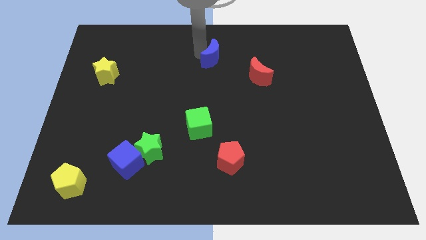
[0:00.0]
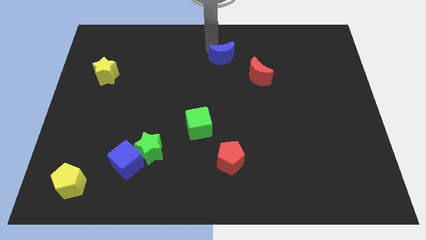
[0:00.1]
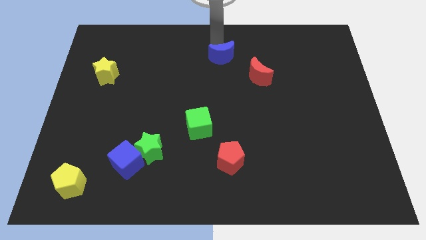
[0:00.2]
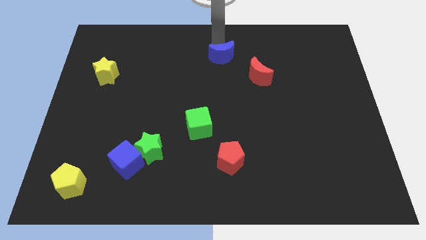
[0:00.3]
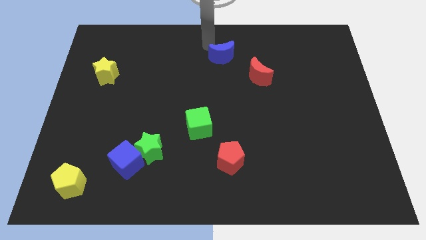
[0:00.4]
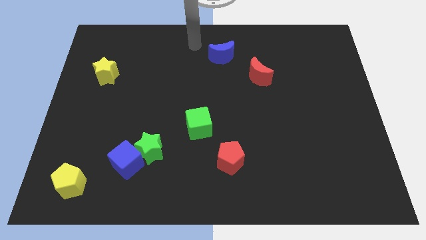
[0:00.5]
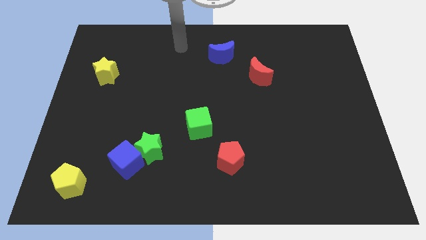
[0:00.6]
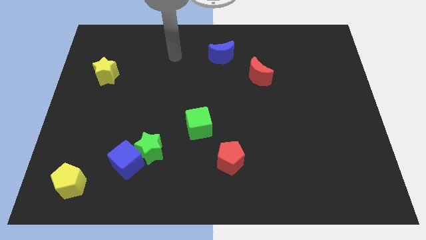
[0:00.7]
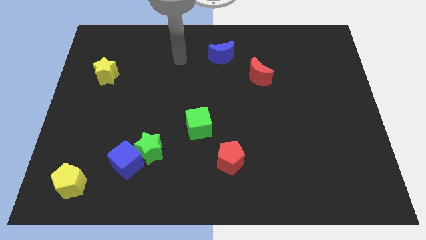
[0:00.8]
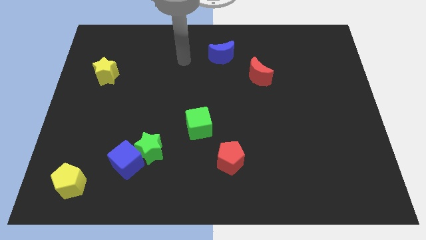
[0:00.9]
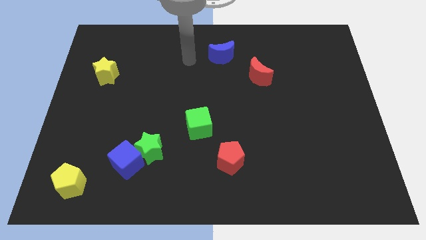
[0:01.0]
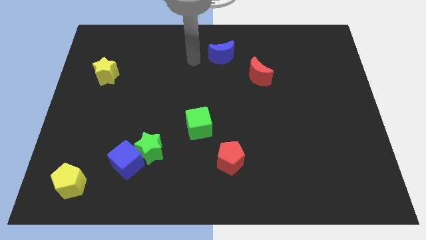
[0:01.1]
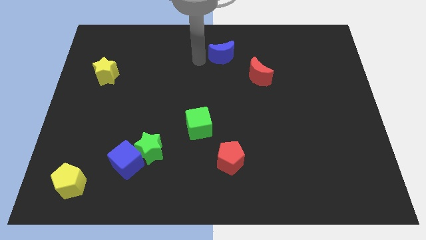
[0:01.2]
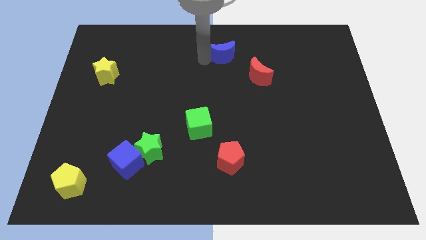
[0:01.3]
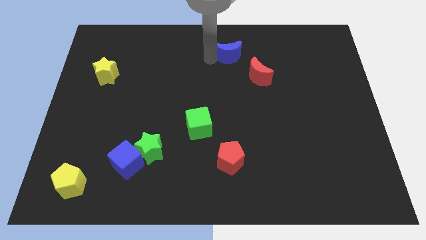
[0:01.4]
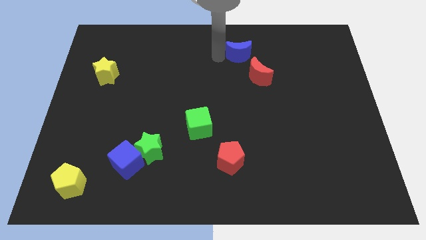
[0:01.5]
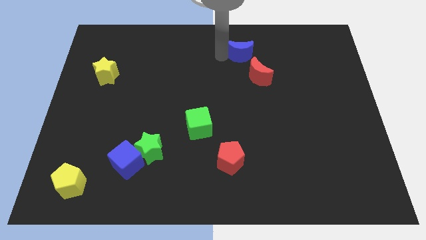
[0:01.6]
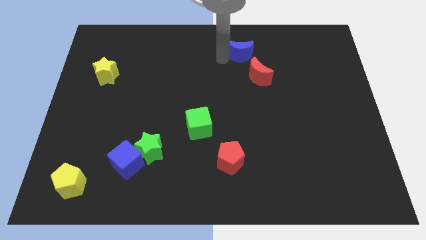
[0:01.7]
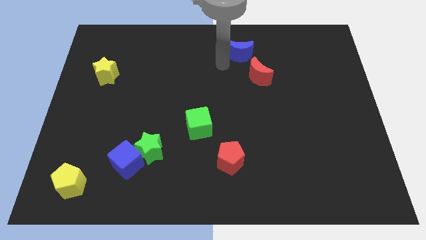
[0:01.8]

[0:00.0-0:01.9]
move the blue crescent to the right side

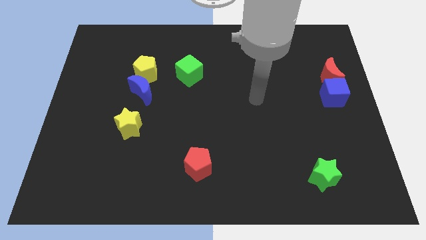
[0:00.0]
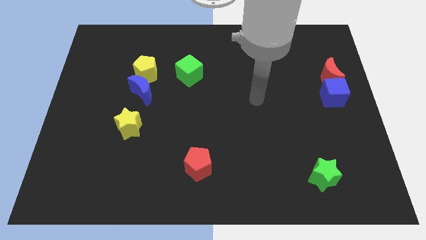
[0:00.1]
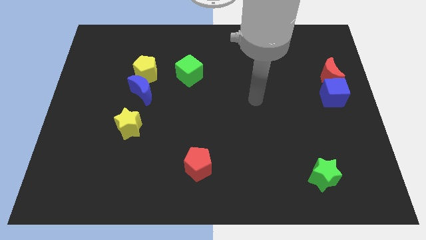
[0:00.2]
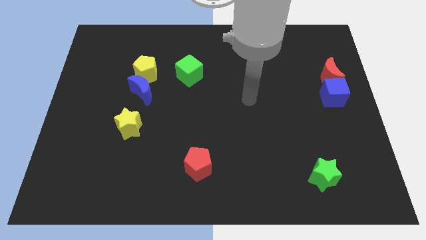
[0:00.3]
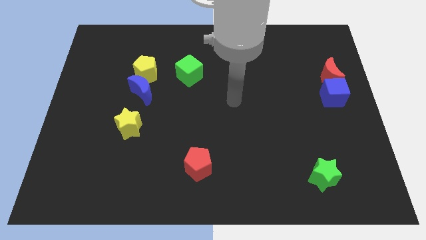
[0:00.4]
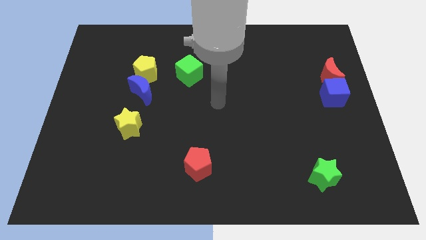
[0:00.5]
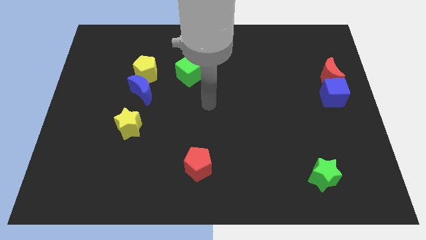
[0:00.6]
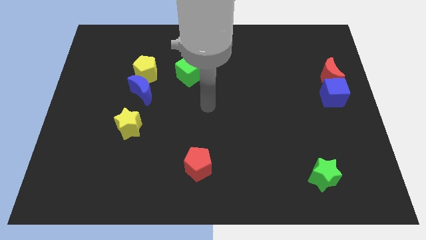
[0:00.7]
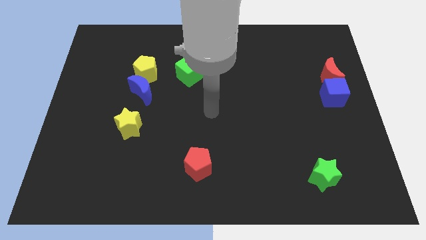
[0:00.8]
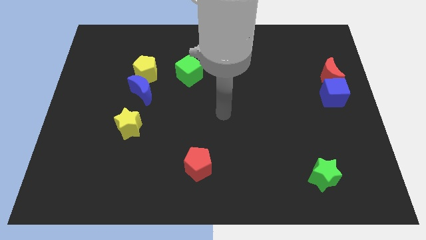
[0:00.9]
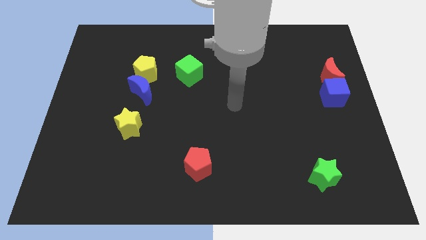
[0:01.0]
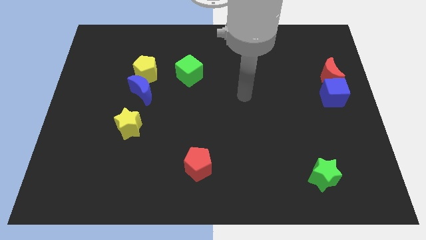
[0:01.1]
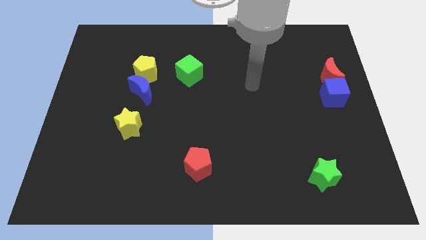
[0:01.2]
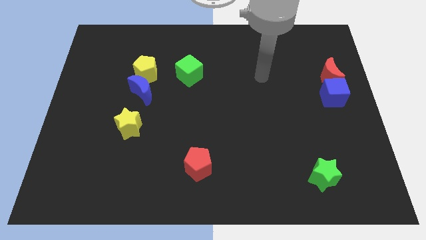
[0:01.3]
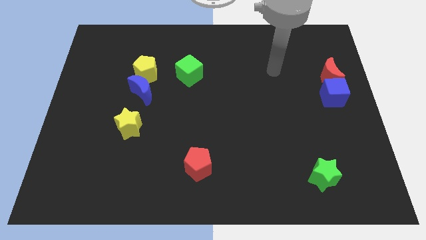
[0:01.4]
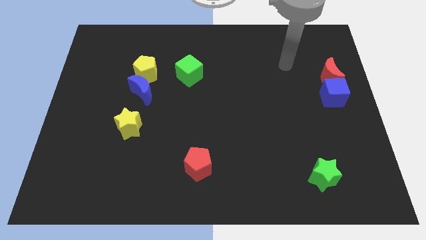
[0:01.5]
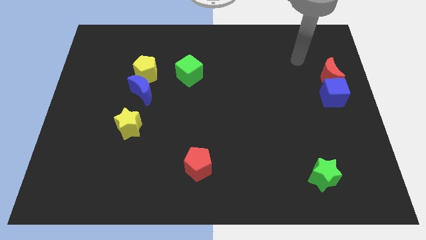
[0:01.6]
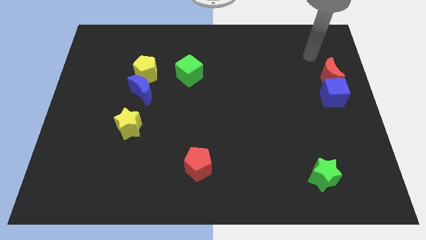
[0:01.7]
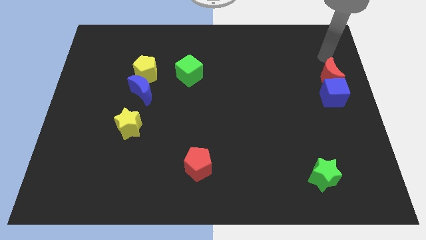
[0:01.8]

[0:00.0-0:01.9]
move the arm above the red moon

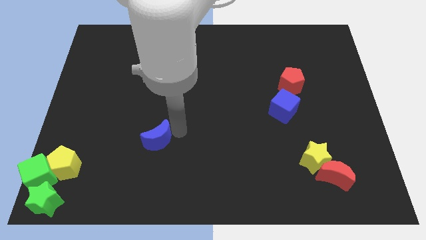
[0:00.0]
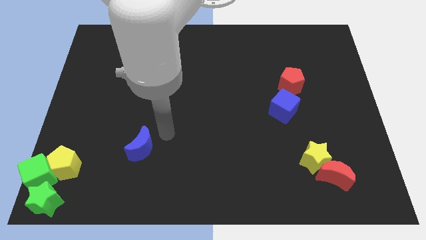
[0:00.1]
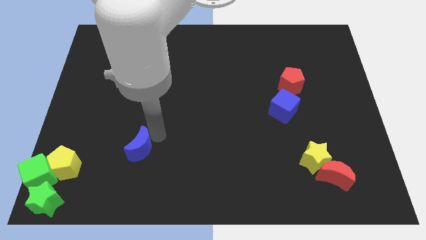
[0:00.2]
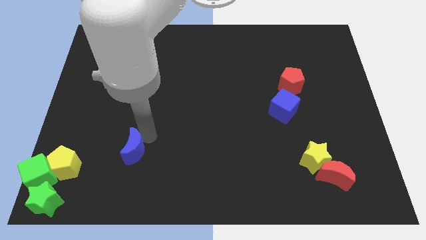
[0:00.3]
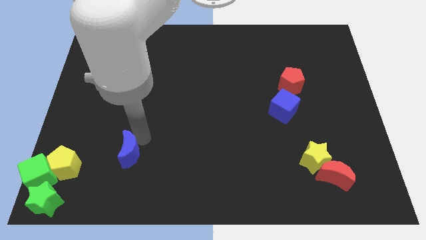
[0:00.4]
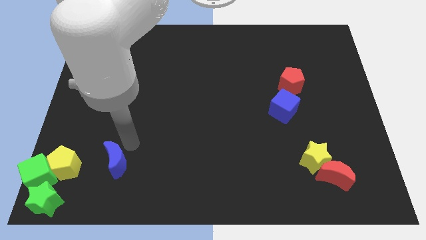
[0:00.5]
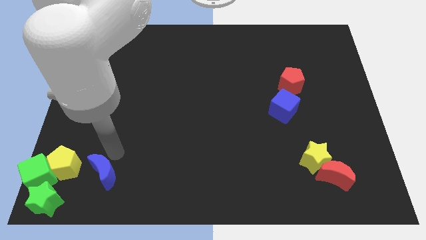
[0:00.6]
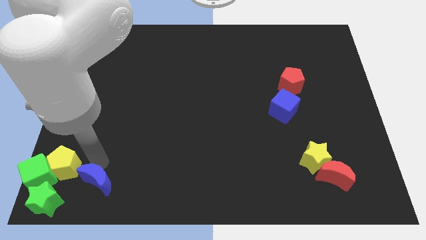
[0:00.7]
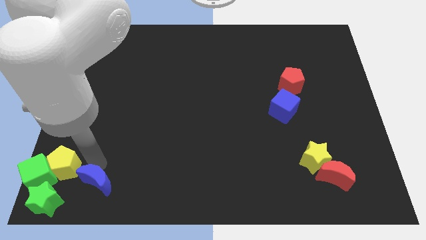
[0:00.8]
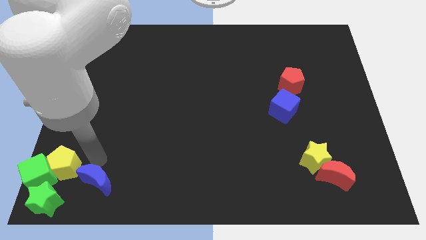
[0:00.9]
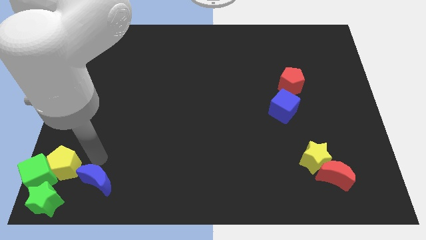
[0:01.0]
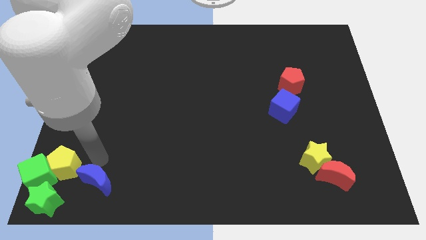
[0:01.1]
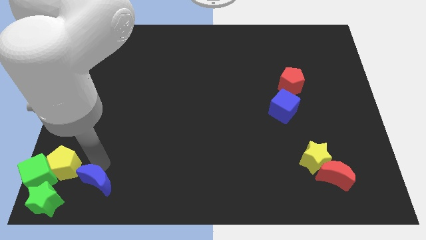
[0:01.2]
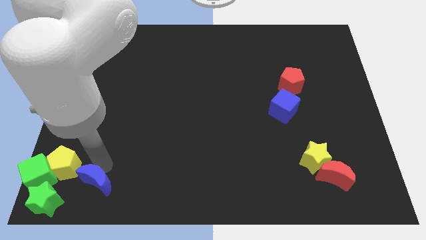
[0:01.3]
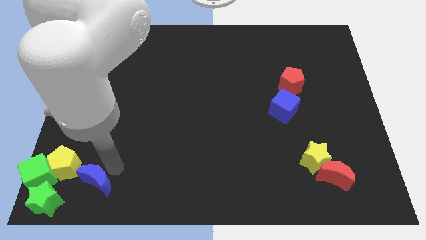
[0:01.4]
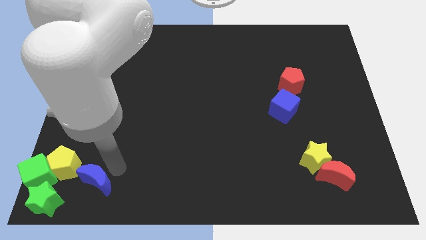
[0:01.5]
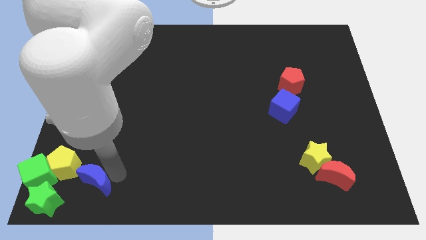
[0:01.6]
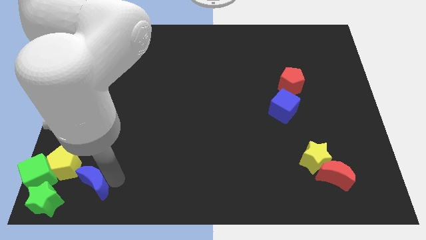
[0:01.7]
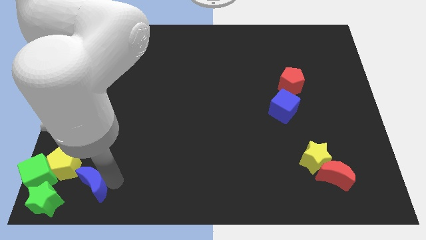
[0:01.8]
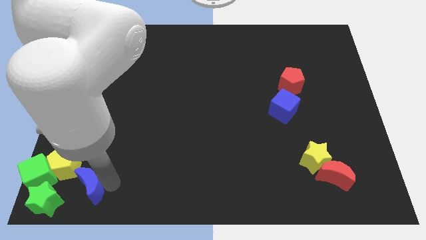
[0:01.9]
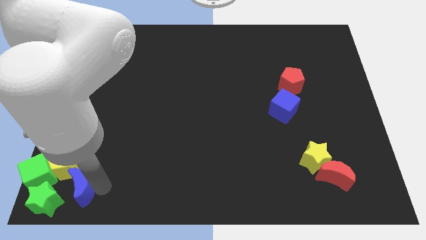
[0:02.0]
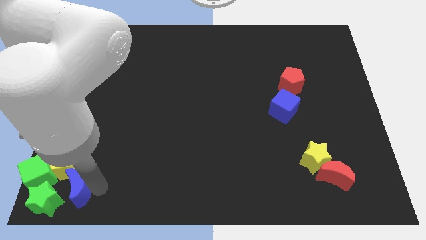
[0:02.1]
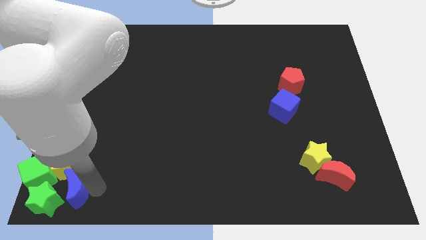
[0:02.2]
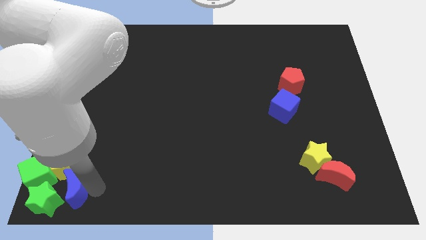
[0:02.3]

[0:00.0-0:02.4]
push the blue crescent to the group of blocks at the bottom left corner of the board

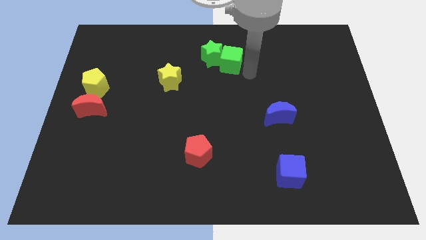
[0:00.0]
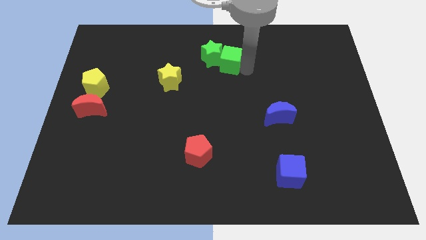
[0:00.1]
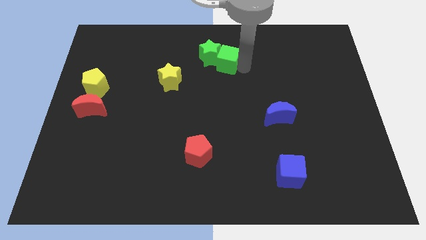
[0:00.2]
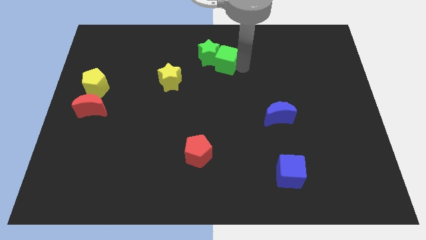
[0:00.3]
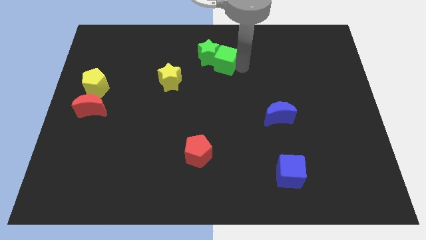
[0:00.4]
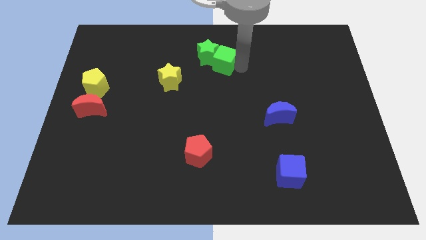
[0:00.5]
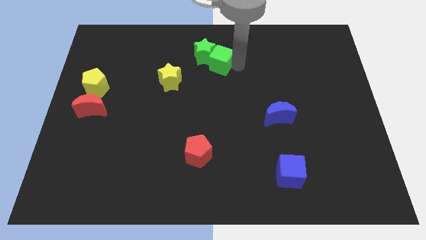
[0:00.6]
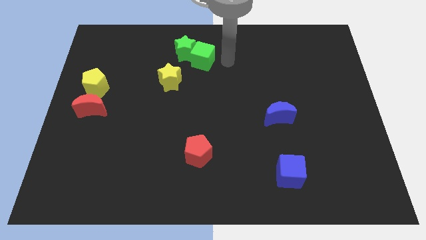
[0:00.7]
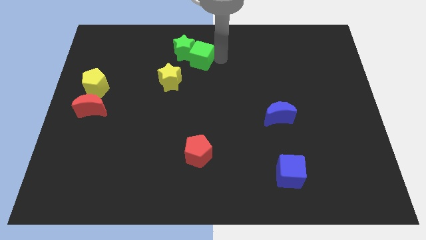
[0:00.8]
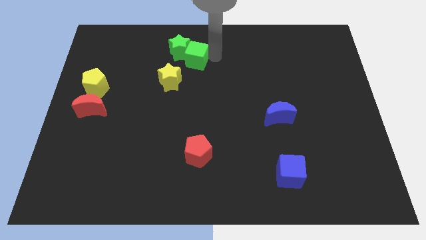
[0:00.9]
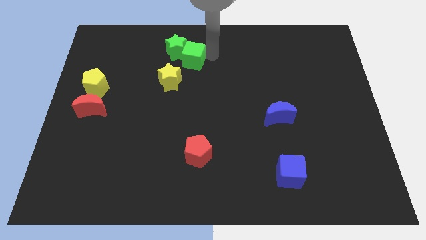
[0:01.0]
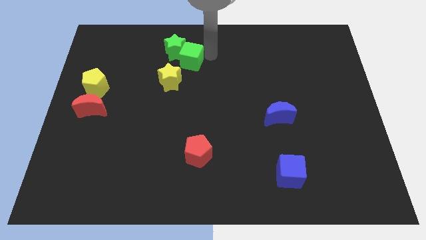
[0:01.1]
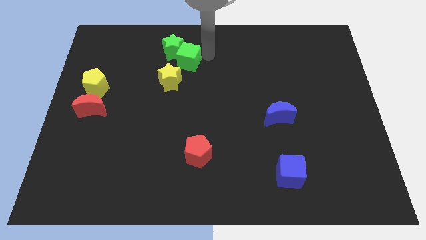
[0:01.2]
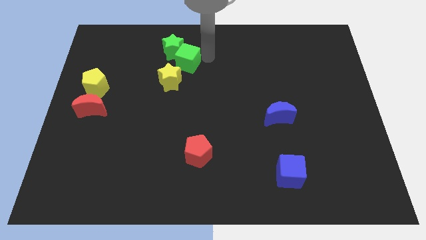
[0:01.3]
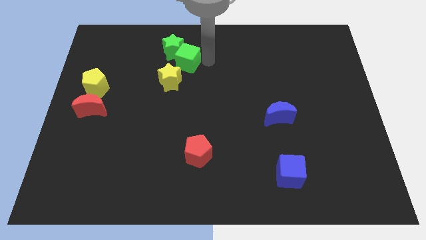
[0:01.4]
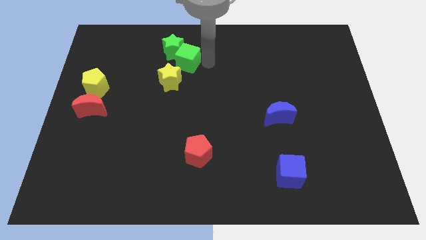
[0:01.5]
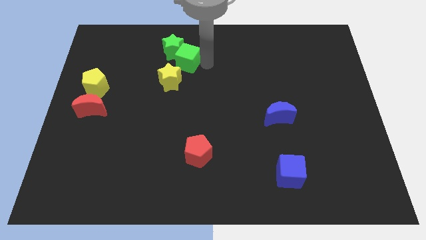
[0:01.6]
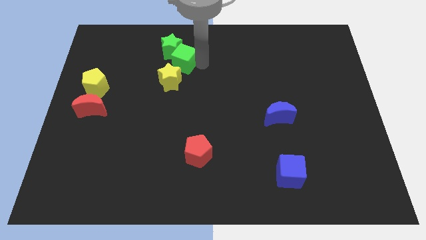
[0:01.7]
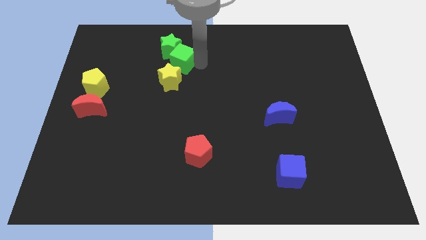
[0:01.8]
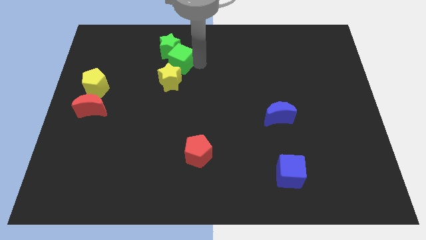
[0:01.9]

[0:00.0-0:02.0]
slide the green cube close to the yellow star

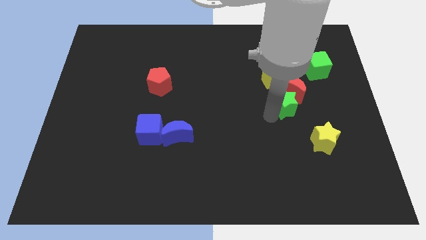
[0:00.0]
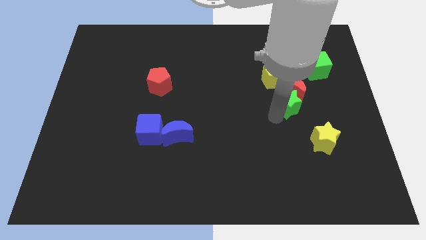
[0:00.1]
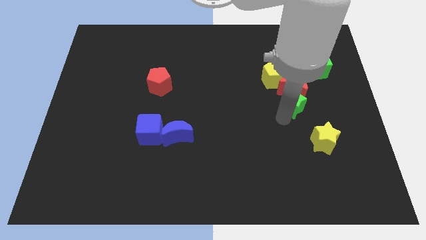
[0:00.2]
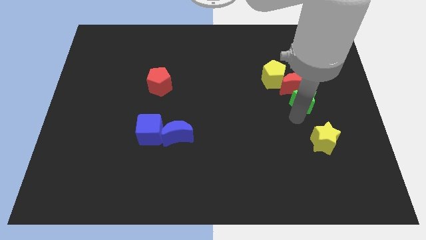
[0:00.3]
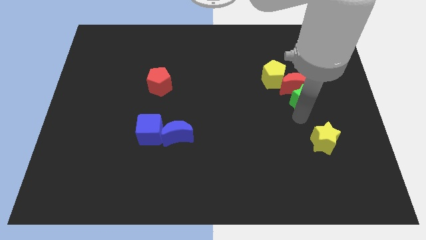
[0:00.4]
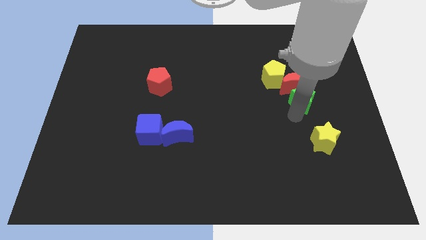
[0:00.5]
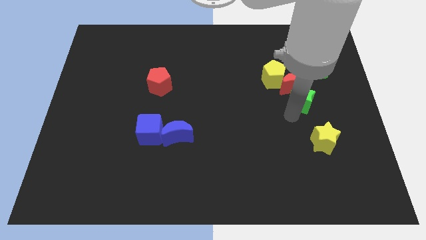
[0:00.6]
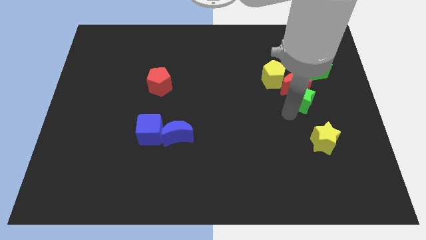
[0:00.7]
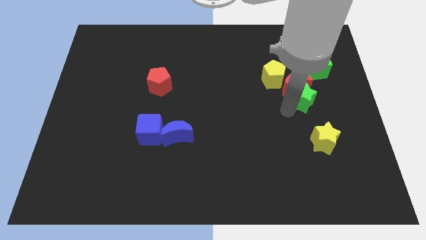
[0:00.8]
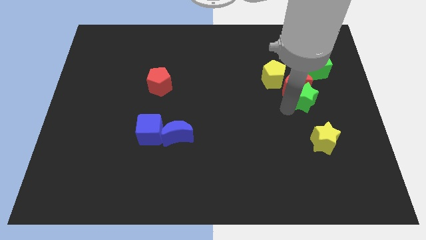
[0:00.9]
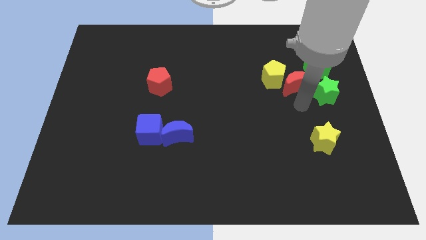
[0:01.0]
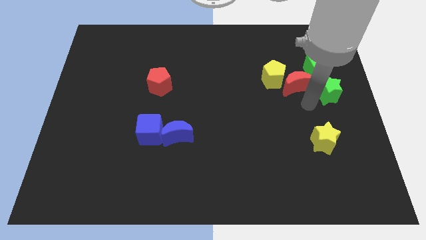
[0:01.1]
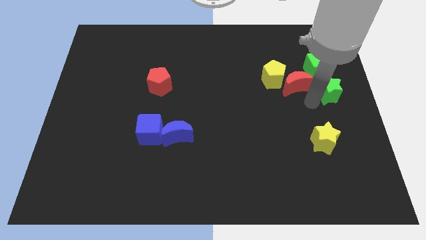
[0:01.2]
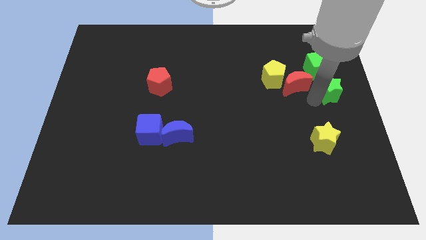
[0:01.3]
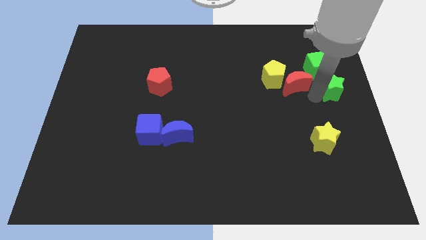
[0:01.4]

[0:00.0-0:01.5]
separate green star from the red crescent
